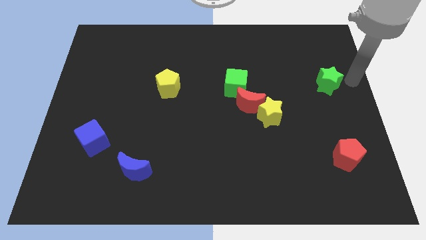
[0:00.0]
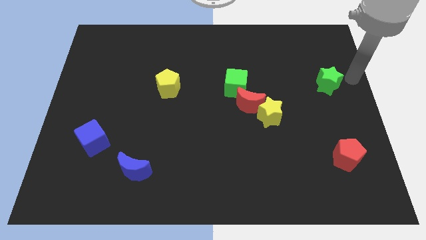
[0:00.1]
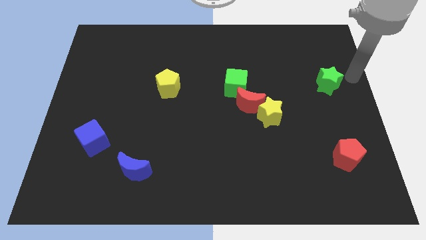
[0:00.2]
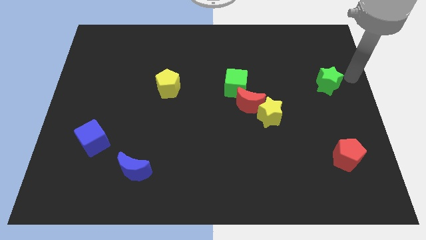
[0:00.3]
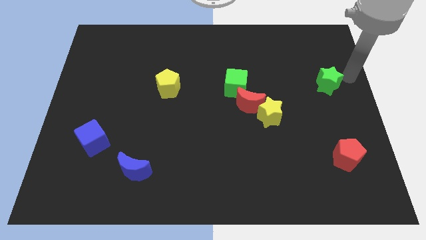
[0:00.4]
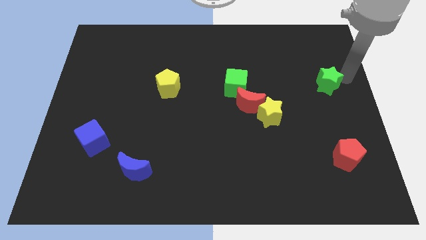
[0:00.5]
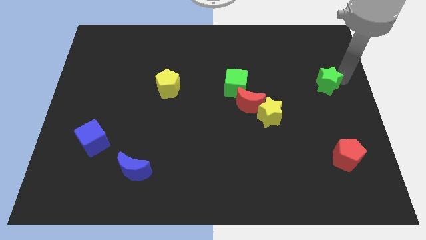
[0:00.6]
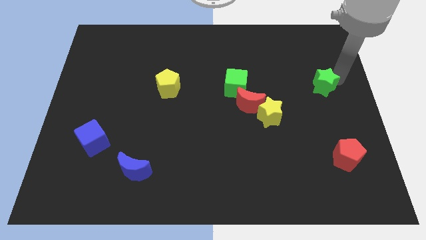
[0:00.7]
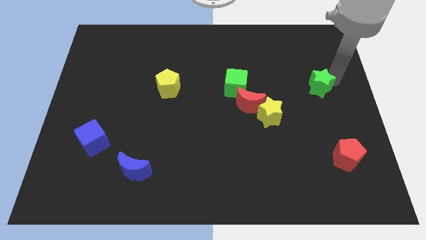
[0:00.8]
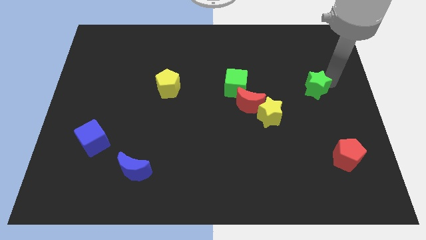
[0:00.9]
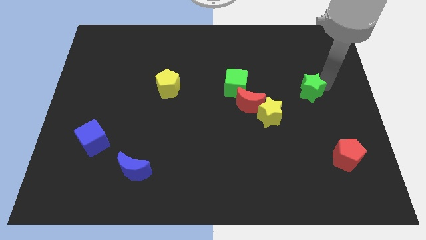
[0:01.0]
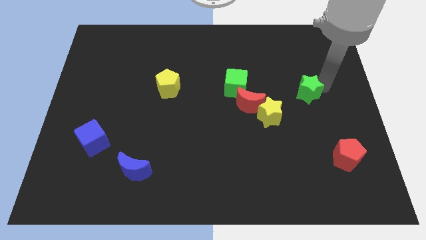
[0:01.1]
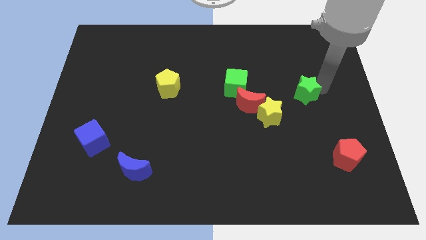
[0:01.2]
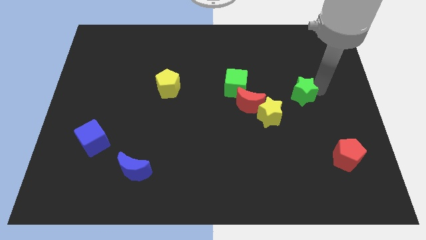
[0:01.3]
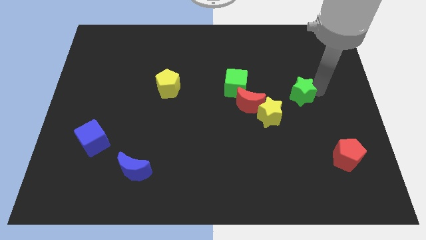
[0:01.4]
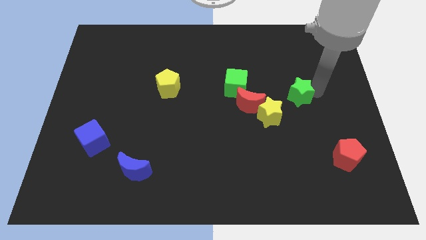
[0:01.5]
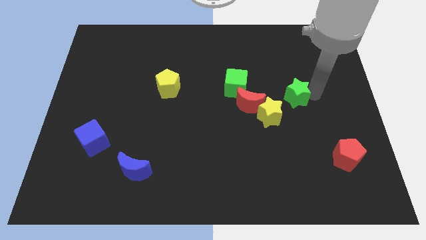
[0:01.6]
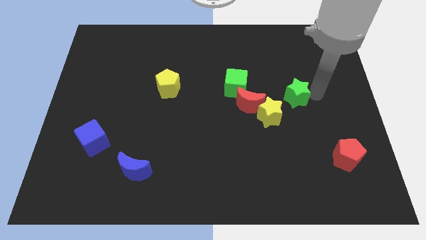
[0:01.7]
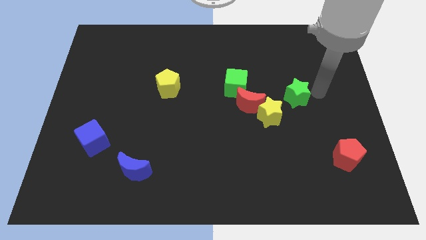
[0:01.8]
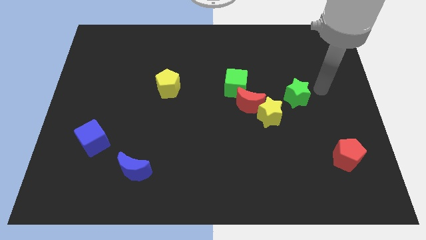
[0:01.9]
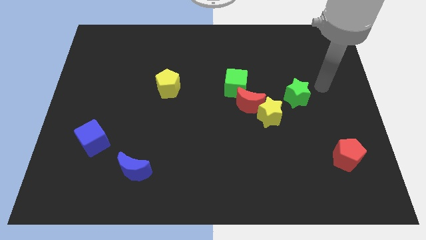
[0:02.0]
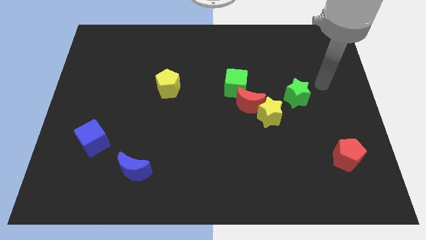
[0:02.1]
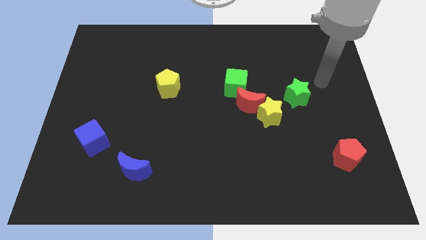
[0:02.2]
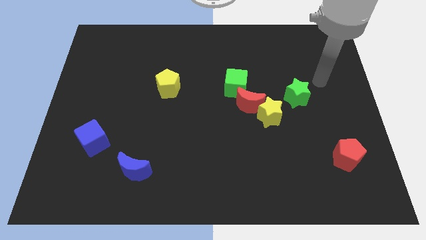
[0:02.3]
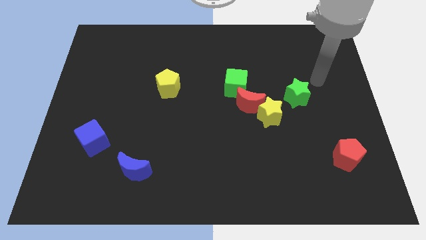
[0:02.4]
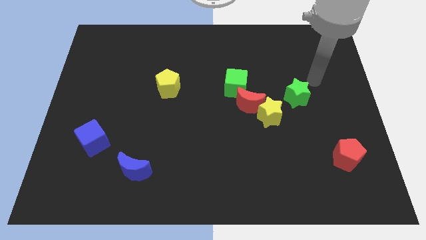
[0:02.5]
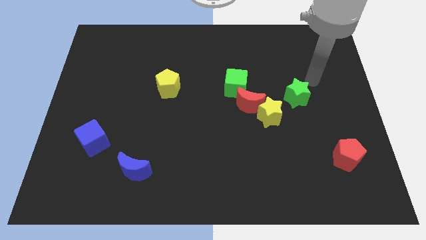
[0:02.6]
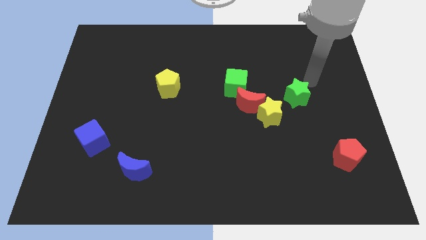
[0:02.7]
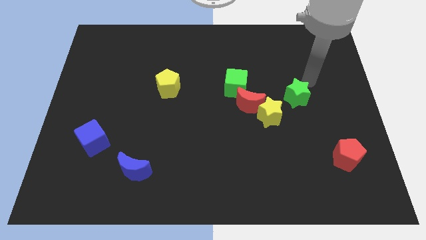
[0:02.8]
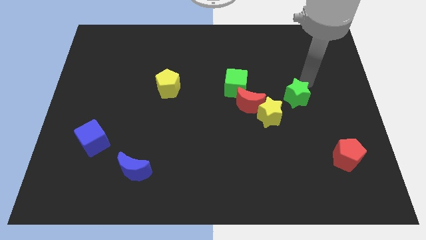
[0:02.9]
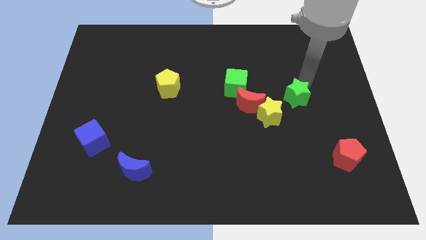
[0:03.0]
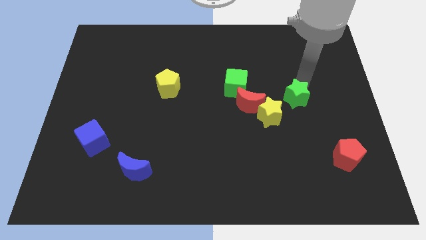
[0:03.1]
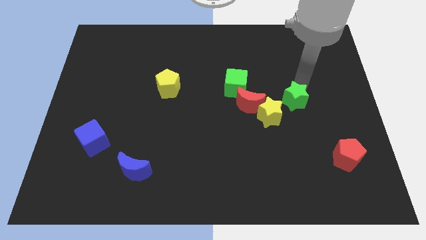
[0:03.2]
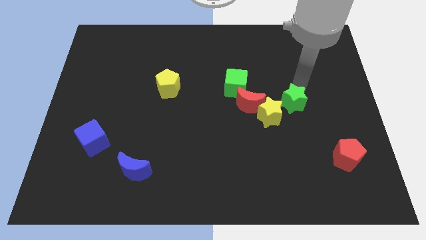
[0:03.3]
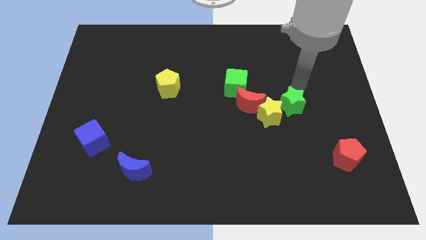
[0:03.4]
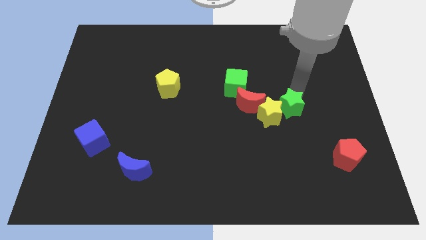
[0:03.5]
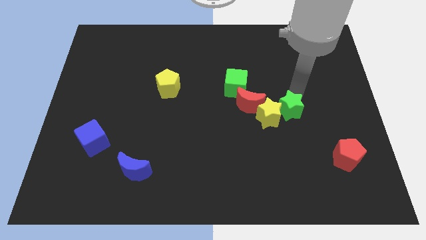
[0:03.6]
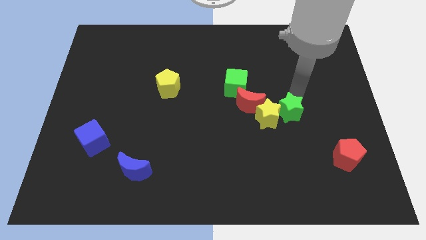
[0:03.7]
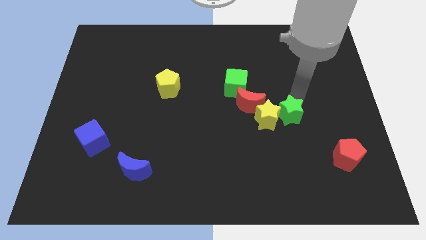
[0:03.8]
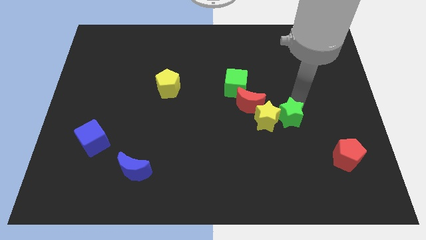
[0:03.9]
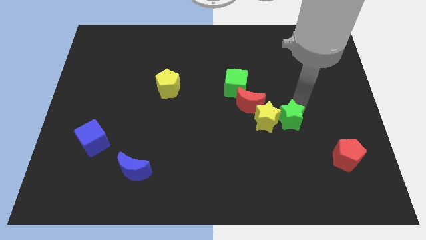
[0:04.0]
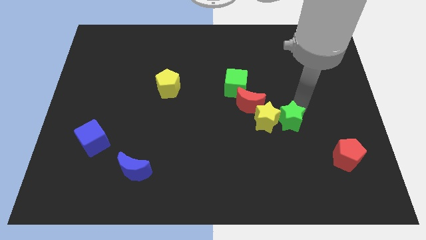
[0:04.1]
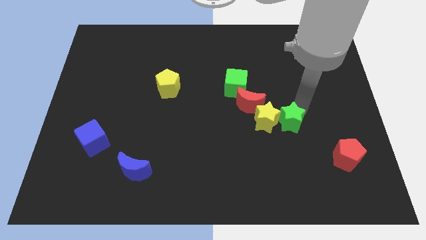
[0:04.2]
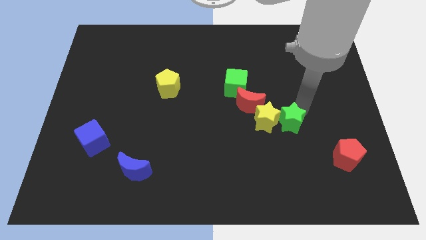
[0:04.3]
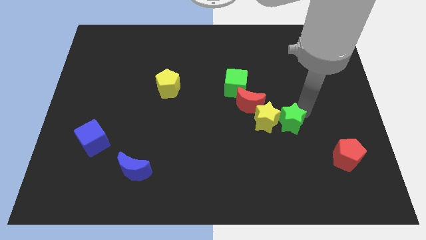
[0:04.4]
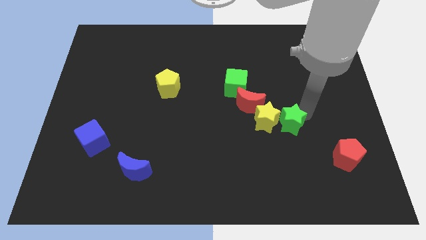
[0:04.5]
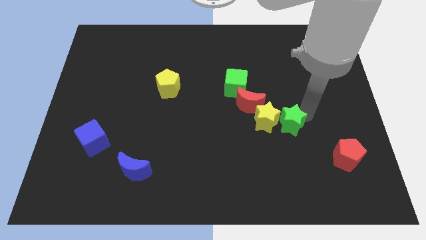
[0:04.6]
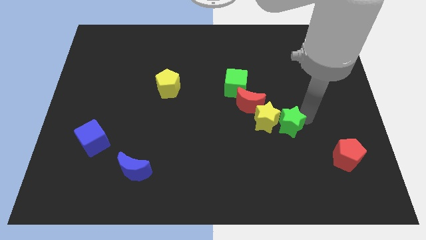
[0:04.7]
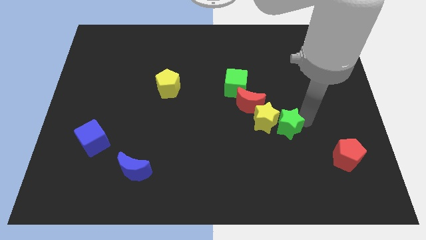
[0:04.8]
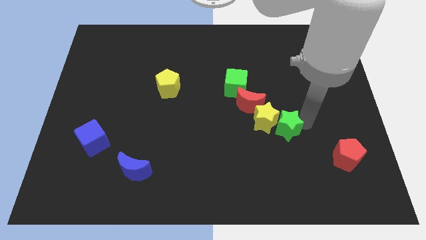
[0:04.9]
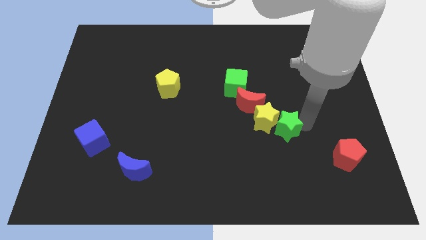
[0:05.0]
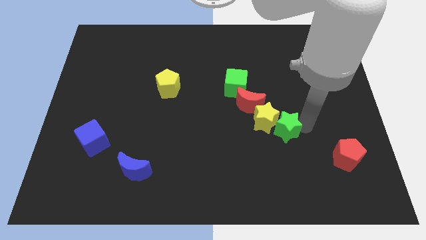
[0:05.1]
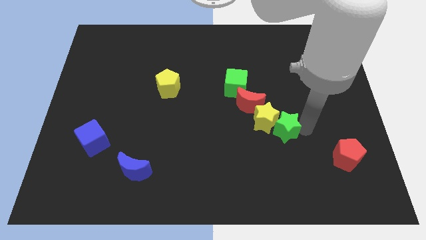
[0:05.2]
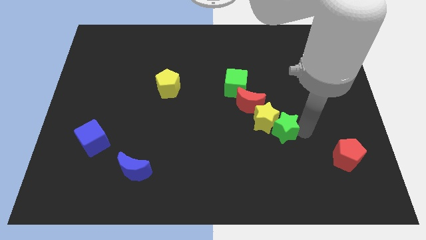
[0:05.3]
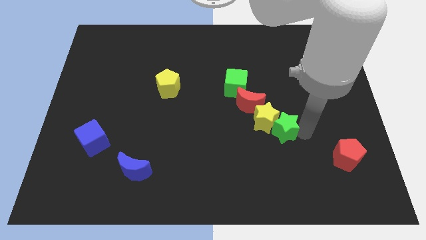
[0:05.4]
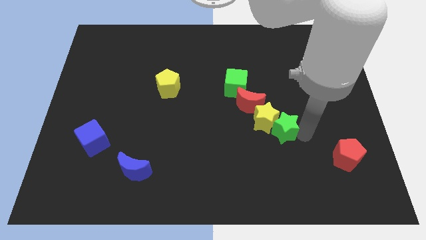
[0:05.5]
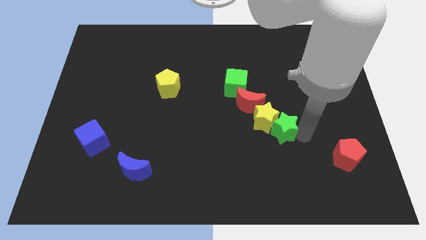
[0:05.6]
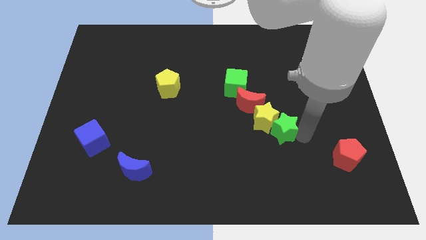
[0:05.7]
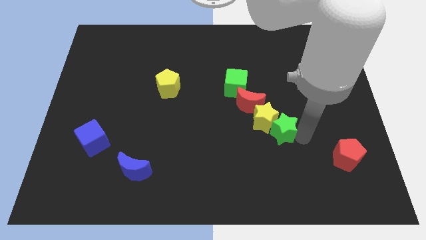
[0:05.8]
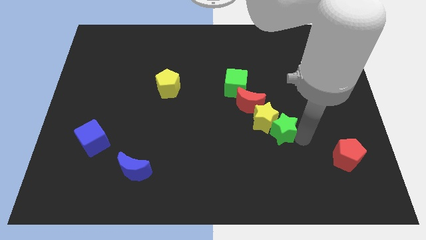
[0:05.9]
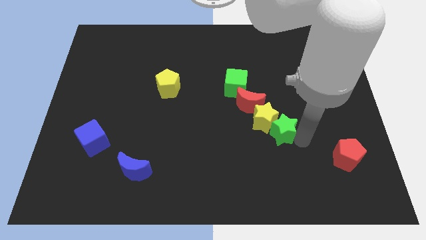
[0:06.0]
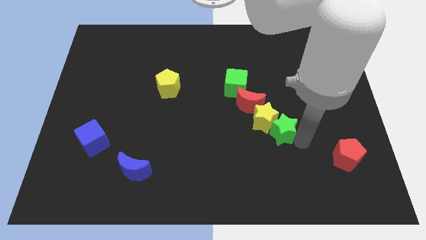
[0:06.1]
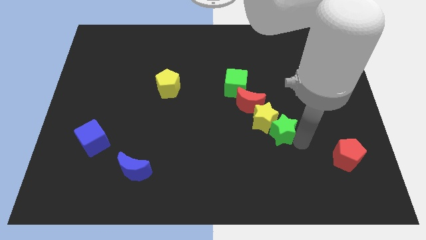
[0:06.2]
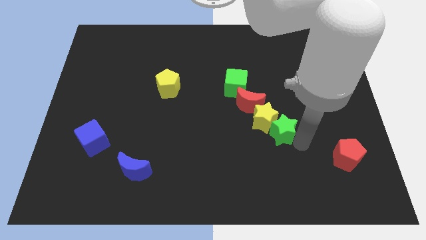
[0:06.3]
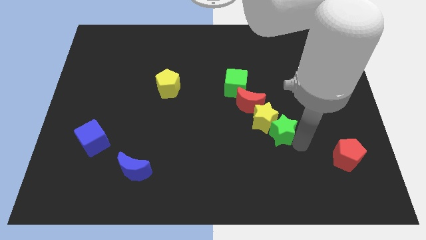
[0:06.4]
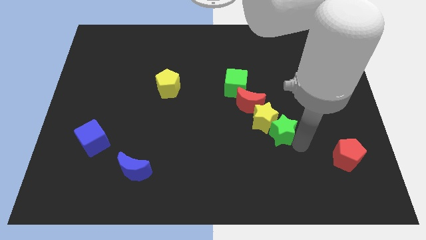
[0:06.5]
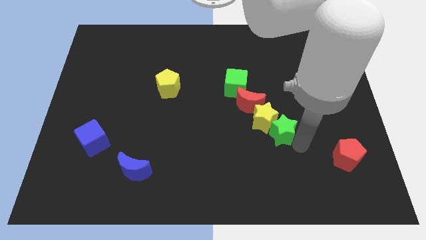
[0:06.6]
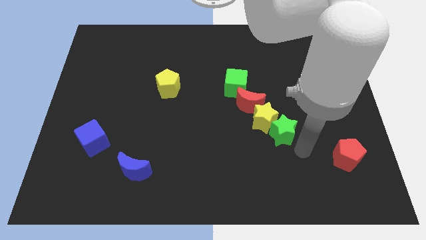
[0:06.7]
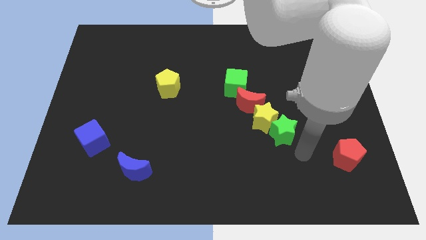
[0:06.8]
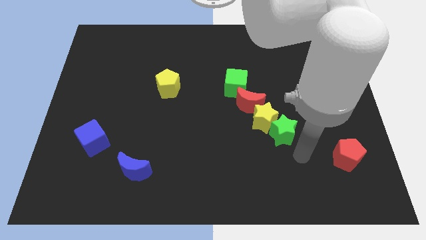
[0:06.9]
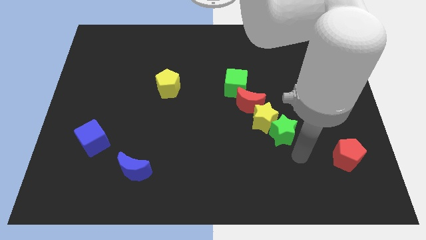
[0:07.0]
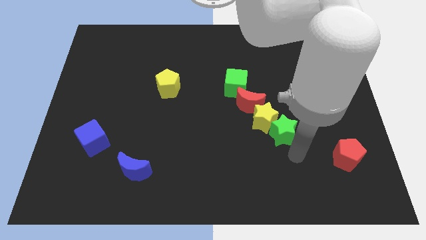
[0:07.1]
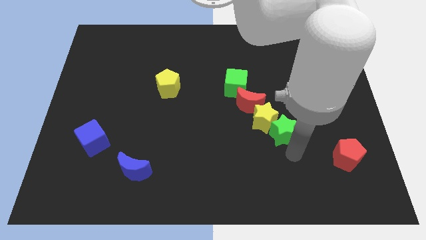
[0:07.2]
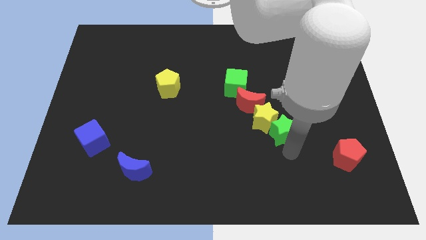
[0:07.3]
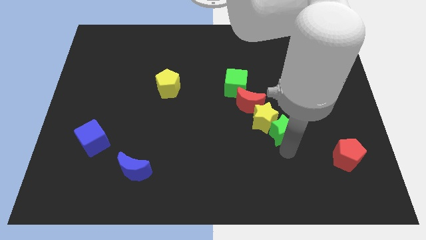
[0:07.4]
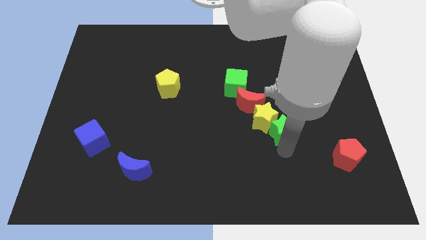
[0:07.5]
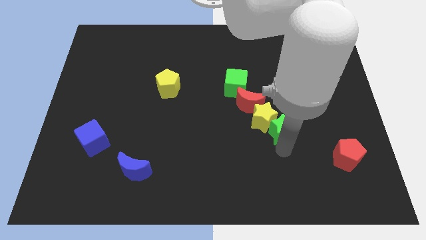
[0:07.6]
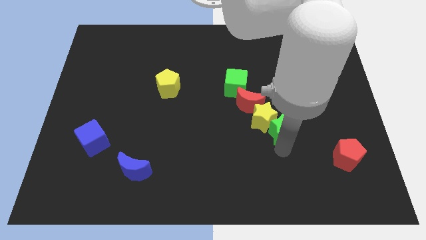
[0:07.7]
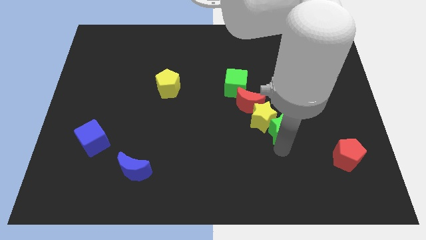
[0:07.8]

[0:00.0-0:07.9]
push the green star into the yellow star

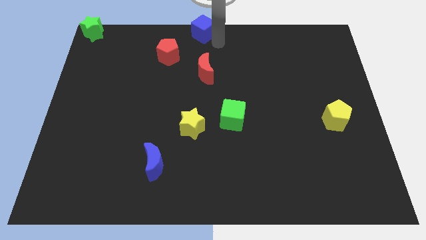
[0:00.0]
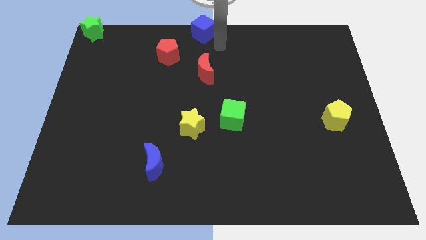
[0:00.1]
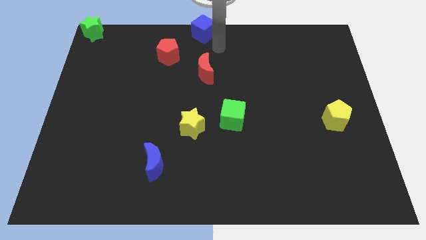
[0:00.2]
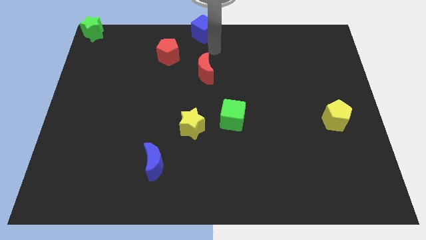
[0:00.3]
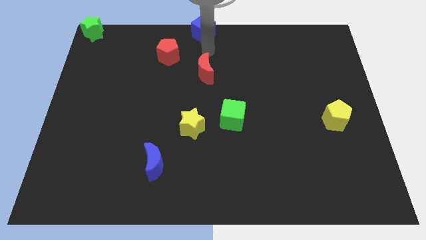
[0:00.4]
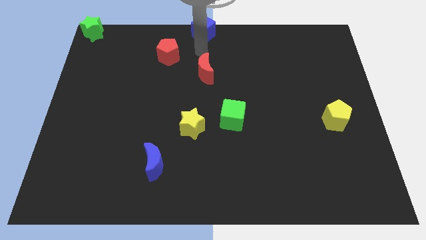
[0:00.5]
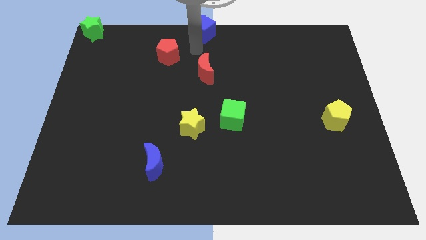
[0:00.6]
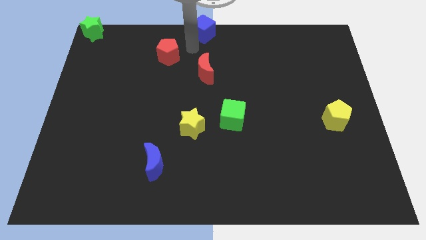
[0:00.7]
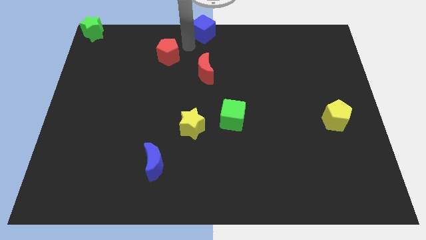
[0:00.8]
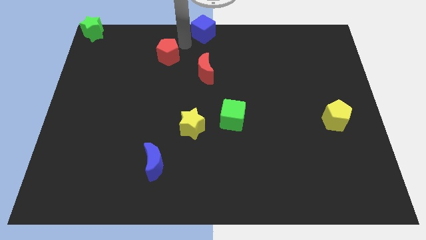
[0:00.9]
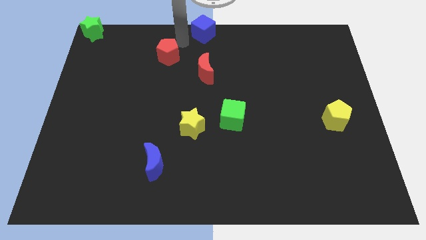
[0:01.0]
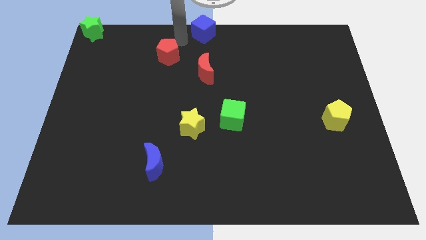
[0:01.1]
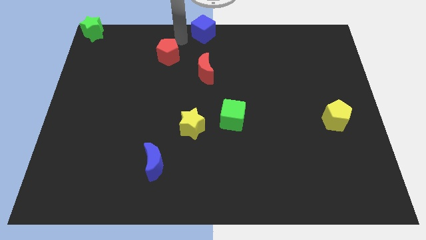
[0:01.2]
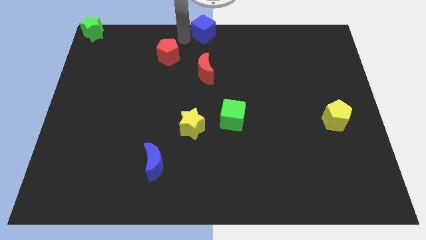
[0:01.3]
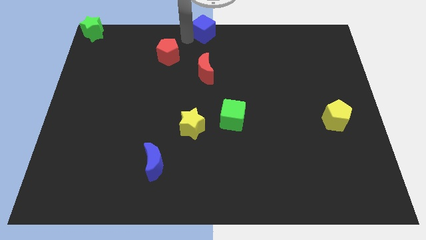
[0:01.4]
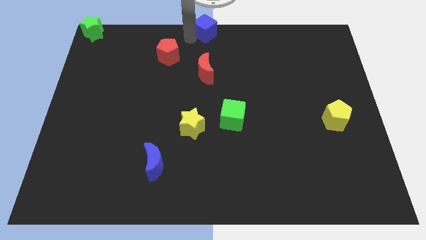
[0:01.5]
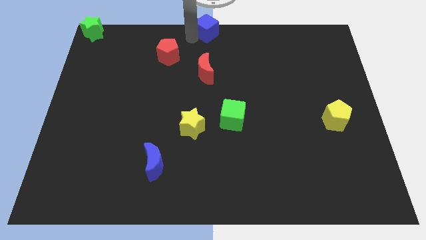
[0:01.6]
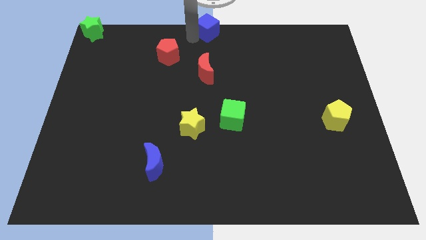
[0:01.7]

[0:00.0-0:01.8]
move blue block slightly right
